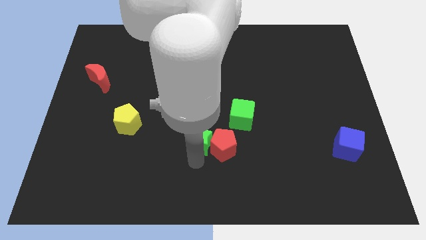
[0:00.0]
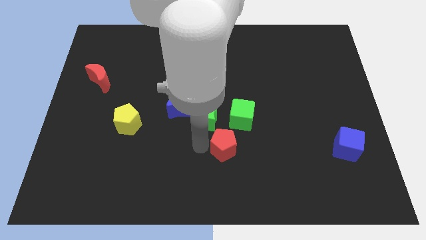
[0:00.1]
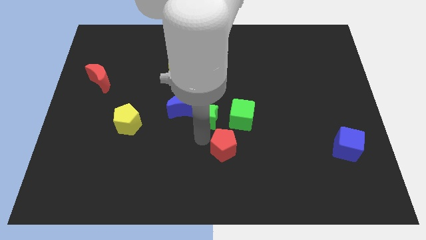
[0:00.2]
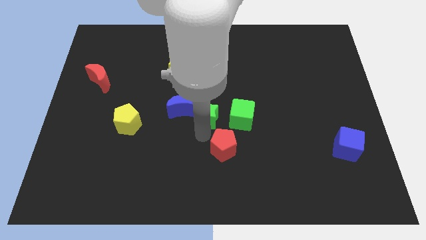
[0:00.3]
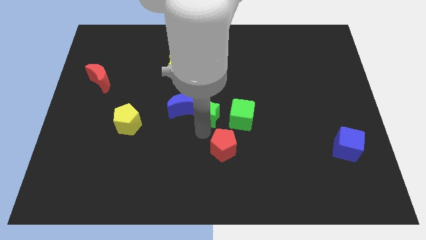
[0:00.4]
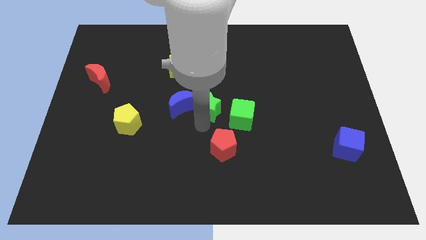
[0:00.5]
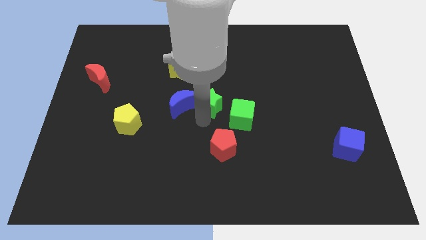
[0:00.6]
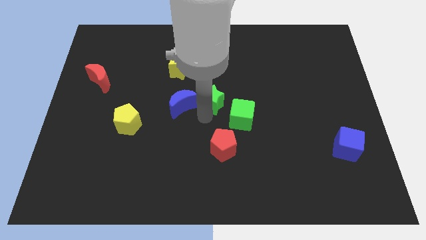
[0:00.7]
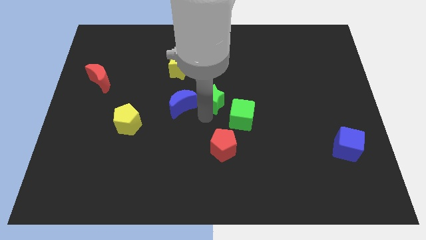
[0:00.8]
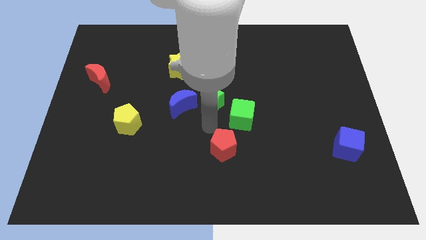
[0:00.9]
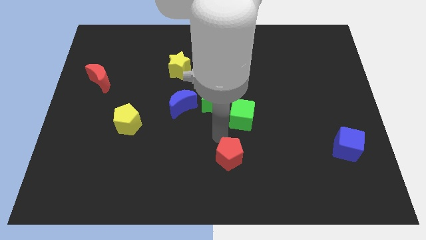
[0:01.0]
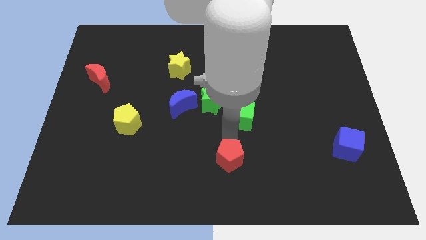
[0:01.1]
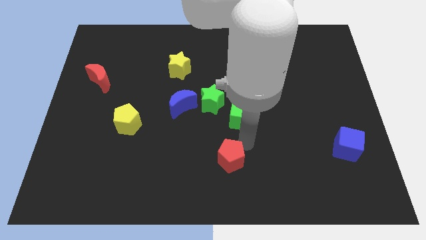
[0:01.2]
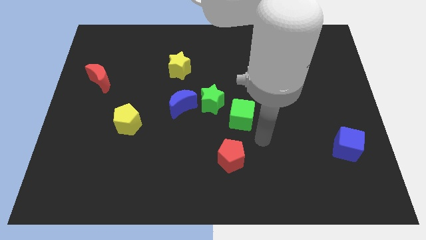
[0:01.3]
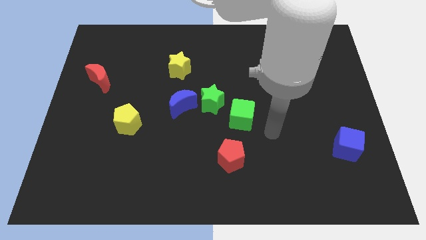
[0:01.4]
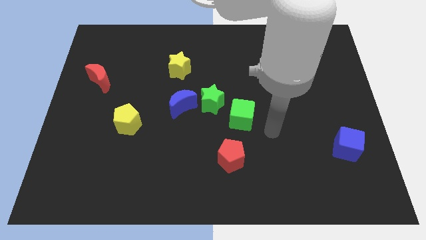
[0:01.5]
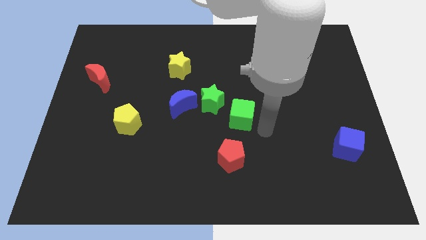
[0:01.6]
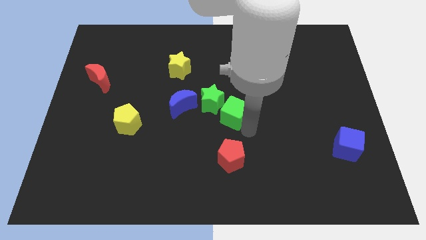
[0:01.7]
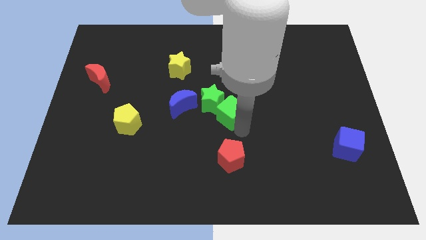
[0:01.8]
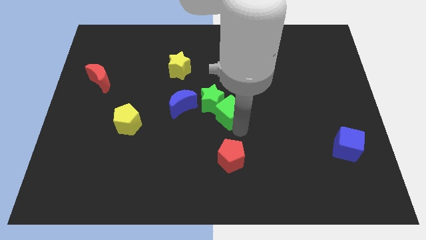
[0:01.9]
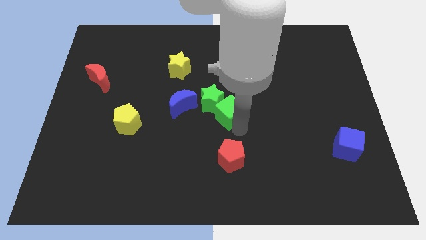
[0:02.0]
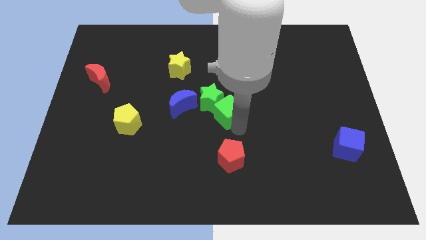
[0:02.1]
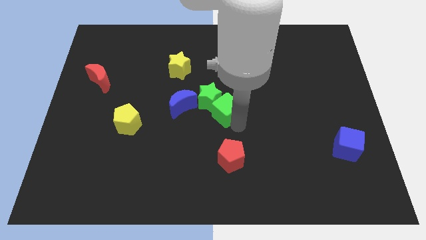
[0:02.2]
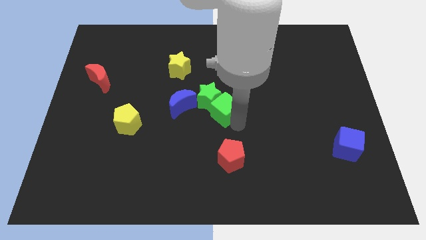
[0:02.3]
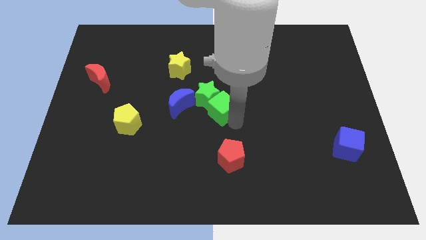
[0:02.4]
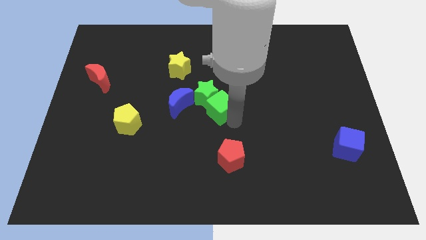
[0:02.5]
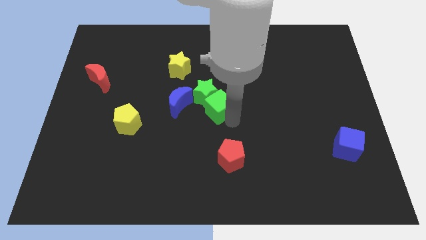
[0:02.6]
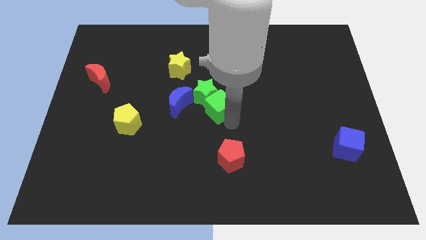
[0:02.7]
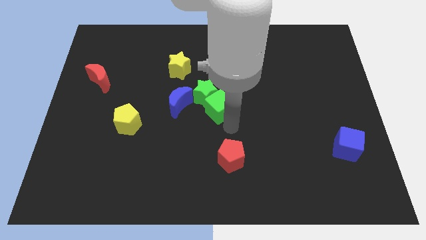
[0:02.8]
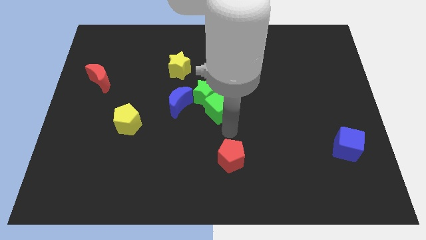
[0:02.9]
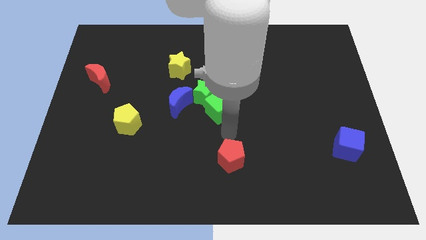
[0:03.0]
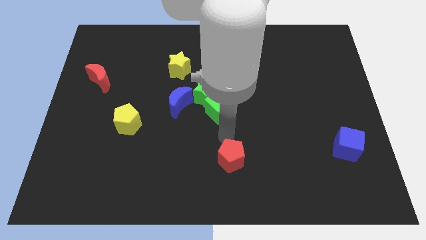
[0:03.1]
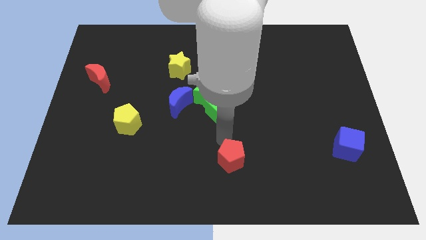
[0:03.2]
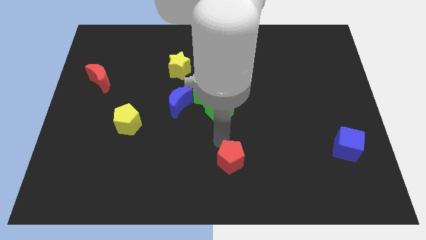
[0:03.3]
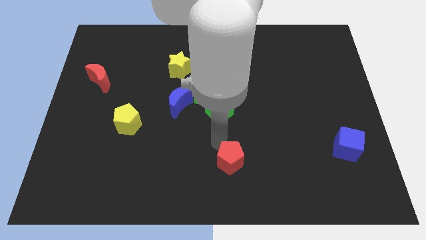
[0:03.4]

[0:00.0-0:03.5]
place both the green blocks at the center of the board

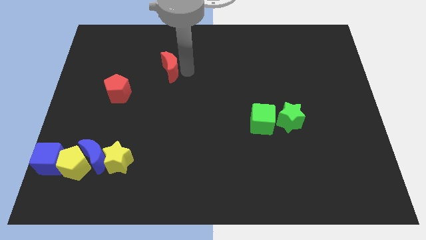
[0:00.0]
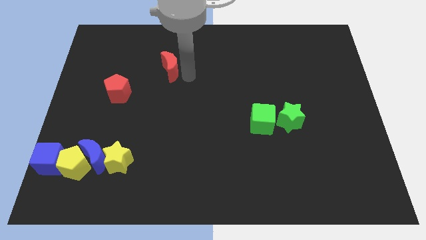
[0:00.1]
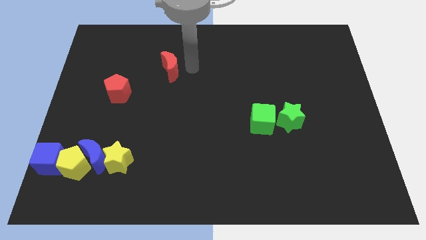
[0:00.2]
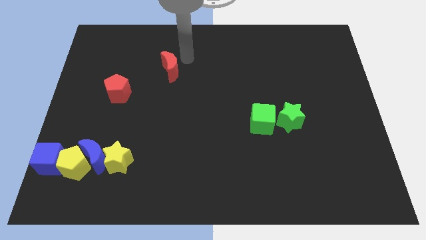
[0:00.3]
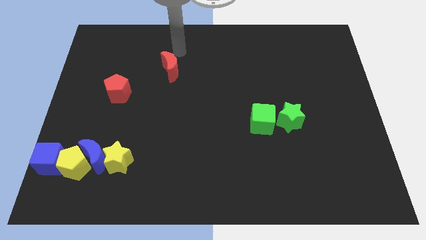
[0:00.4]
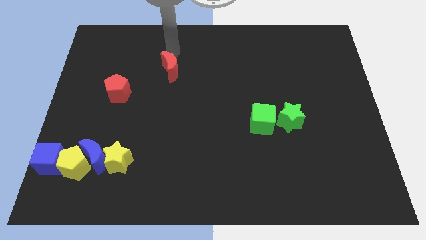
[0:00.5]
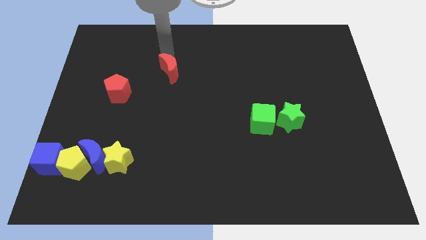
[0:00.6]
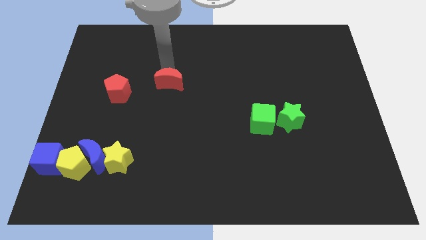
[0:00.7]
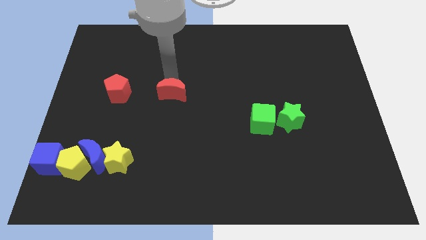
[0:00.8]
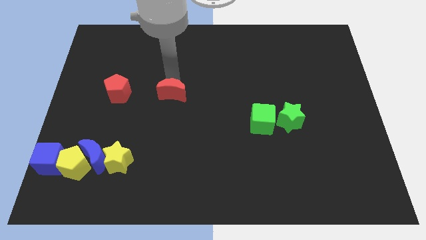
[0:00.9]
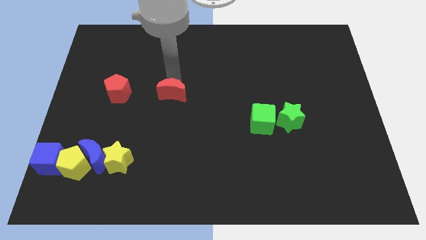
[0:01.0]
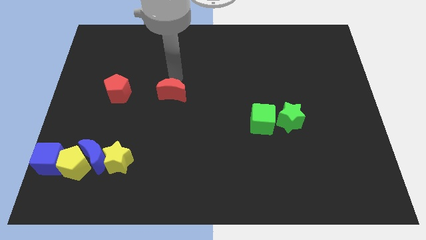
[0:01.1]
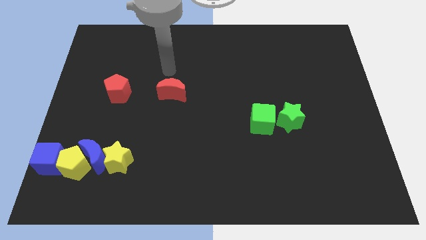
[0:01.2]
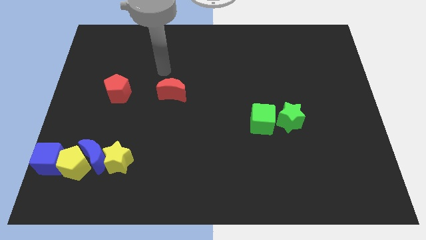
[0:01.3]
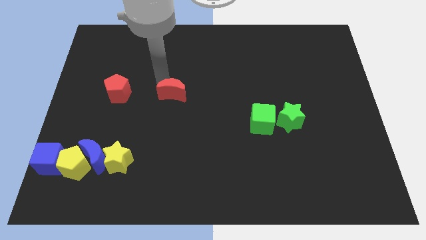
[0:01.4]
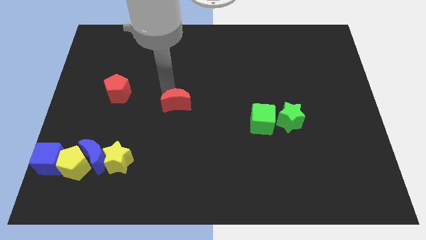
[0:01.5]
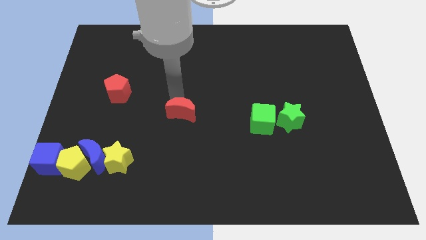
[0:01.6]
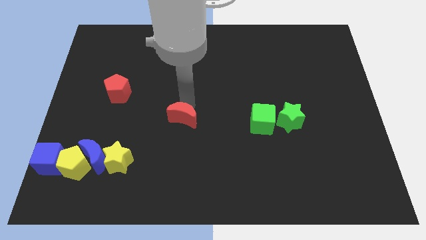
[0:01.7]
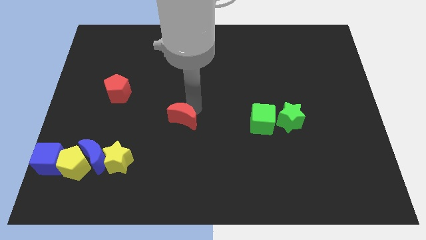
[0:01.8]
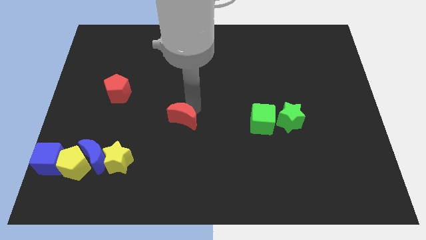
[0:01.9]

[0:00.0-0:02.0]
place the red crescent to the center of the board

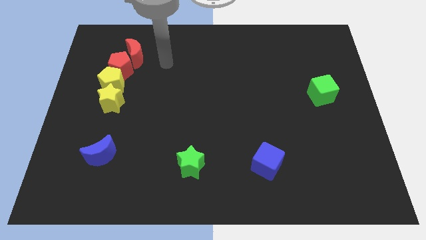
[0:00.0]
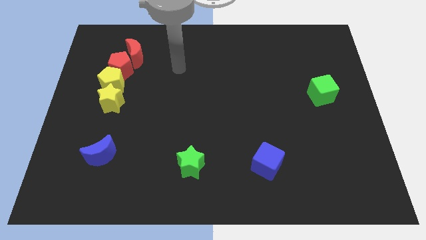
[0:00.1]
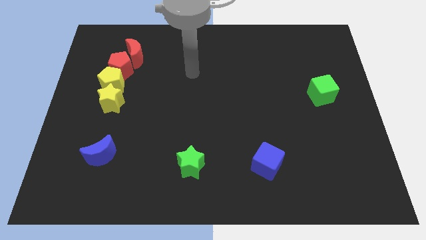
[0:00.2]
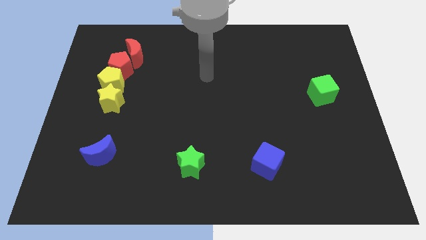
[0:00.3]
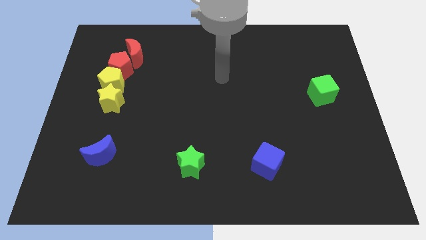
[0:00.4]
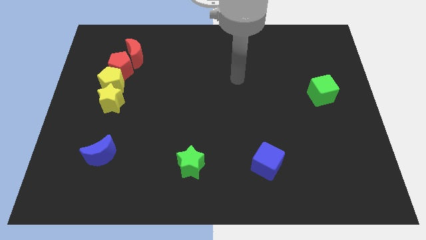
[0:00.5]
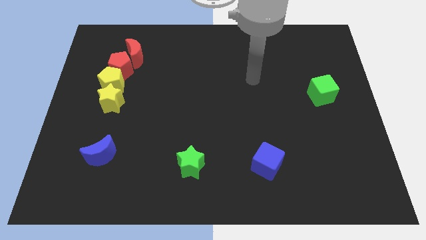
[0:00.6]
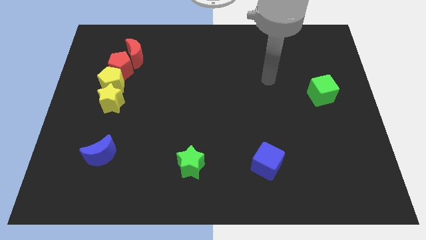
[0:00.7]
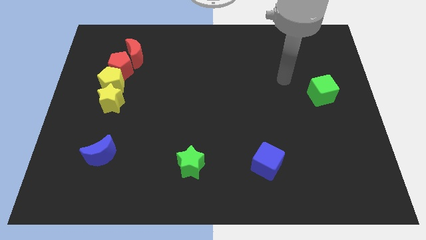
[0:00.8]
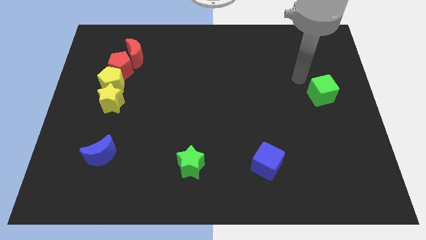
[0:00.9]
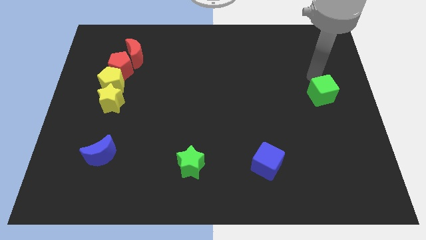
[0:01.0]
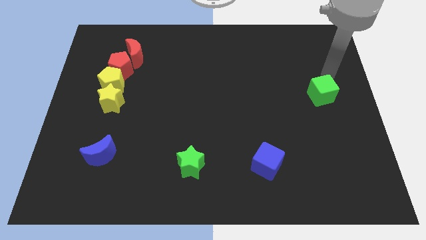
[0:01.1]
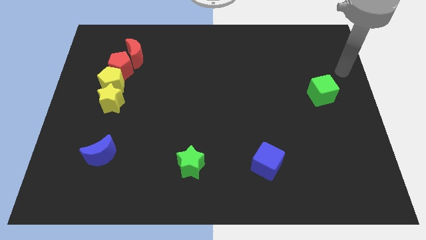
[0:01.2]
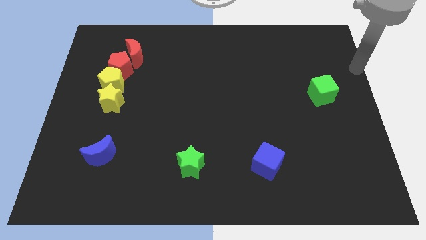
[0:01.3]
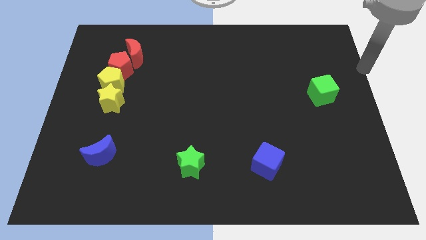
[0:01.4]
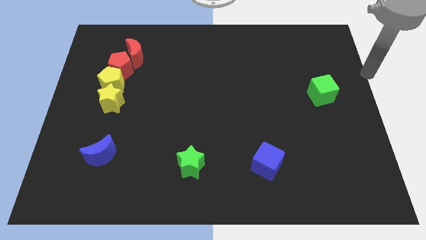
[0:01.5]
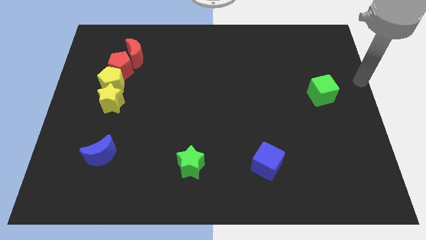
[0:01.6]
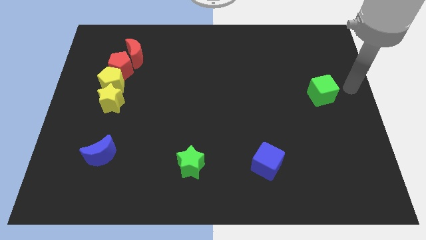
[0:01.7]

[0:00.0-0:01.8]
place your arm right to the green cube

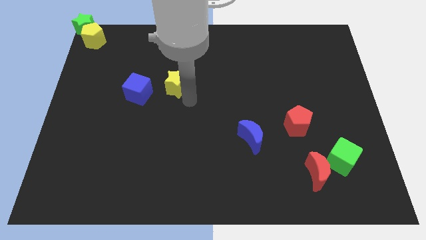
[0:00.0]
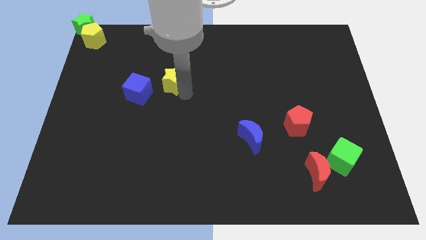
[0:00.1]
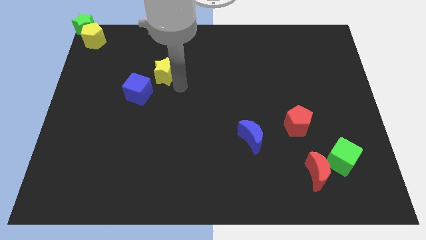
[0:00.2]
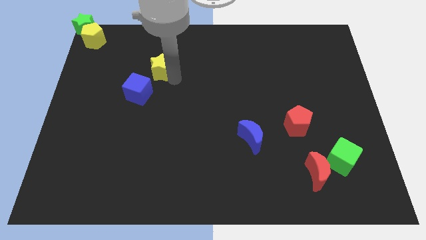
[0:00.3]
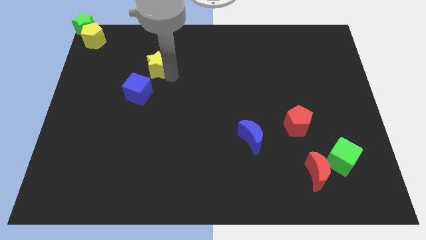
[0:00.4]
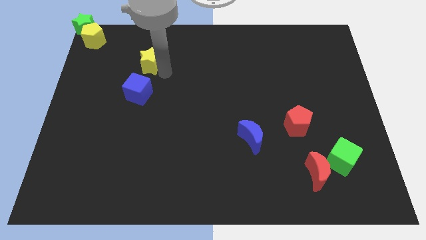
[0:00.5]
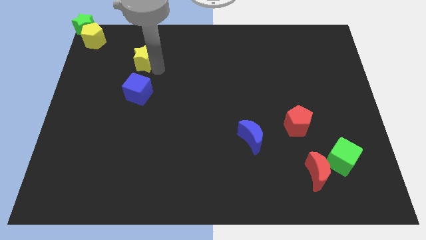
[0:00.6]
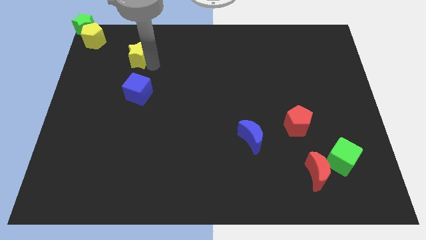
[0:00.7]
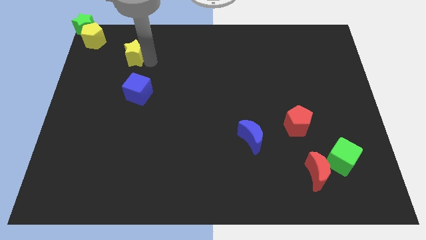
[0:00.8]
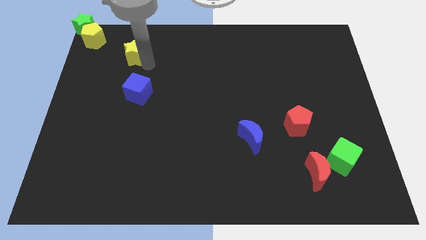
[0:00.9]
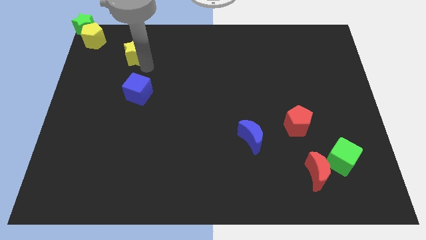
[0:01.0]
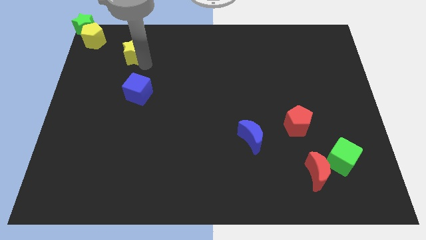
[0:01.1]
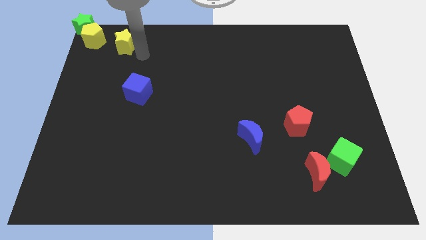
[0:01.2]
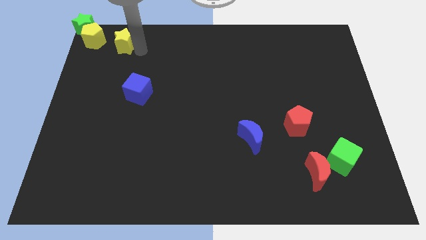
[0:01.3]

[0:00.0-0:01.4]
move the yellow star diagonally on the top right side of the blue cube

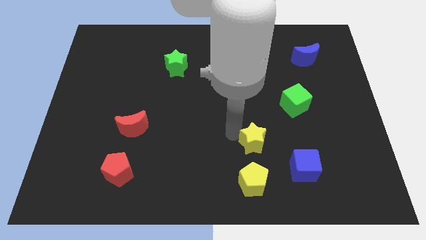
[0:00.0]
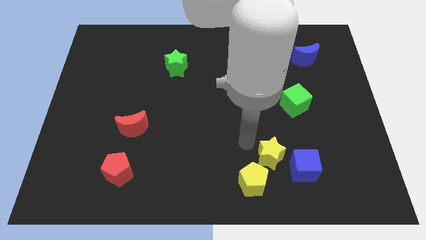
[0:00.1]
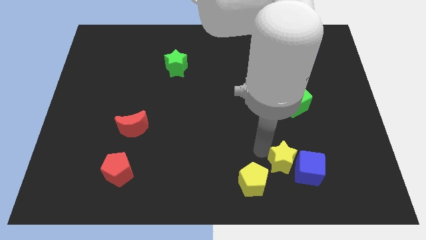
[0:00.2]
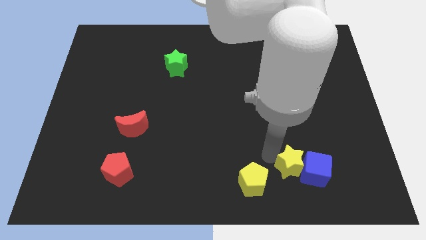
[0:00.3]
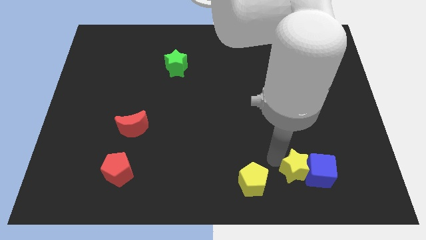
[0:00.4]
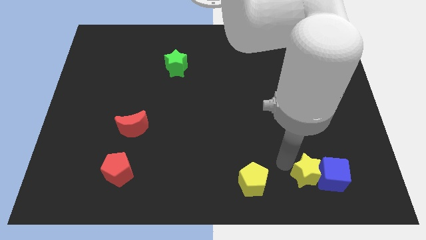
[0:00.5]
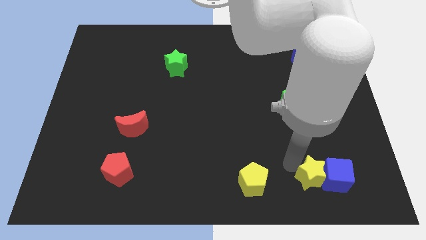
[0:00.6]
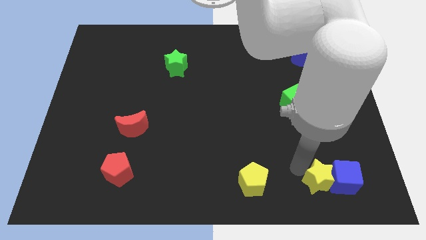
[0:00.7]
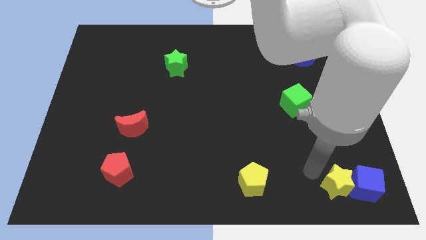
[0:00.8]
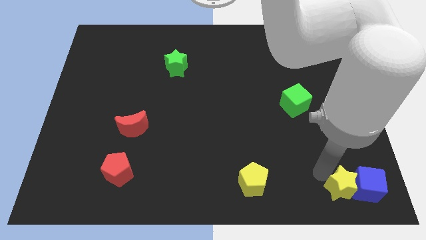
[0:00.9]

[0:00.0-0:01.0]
move yellow star into the blue cube
